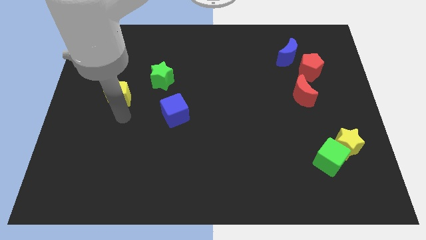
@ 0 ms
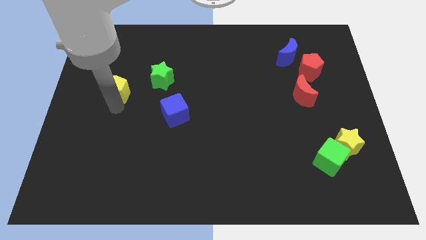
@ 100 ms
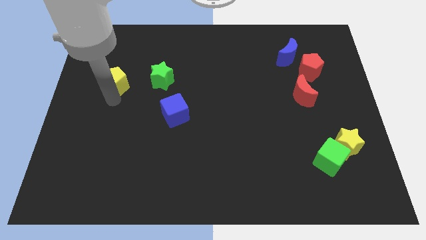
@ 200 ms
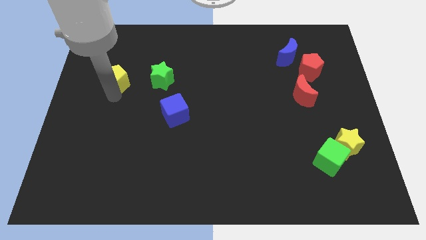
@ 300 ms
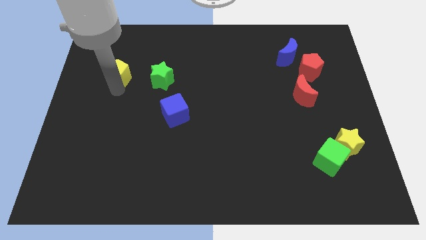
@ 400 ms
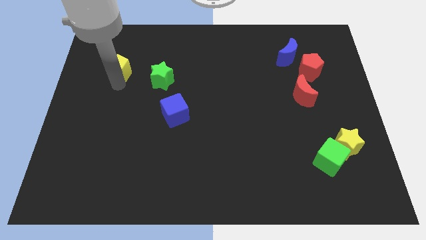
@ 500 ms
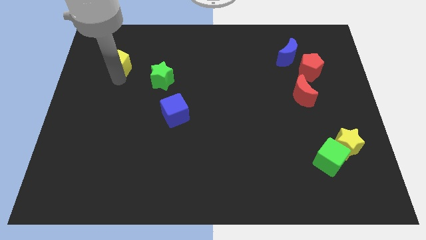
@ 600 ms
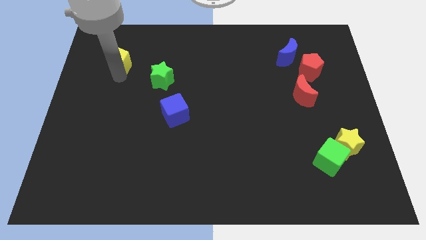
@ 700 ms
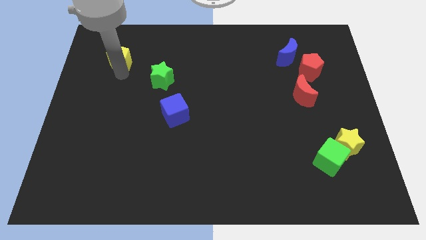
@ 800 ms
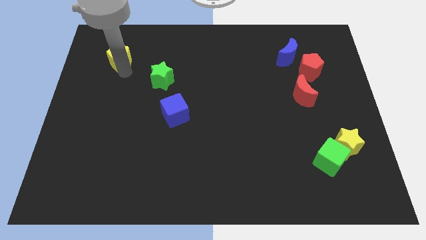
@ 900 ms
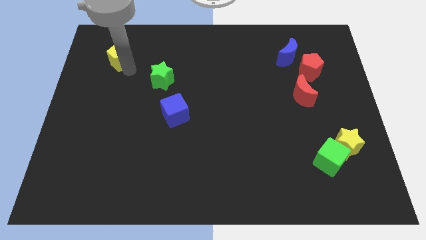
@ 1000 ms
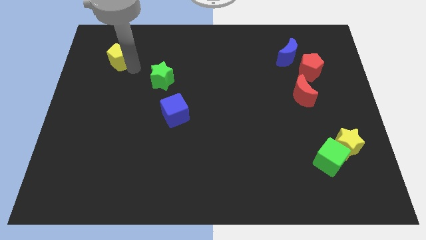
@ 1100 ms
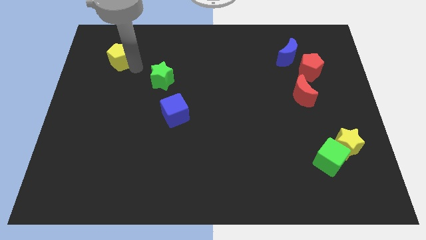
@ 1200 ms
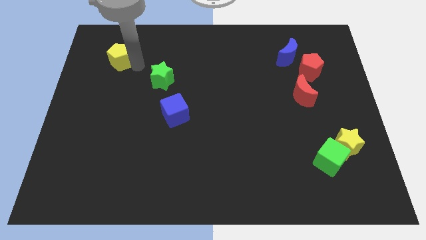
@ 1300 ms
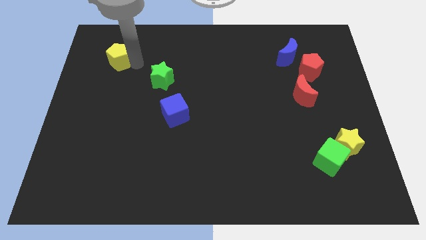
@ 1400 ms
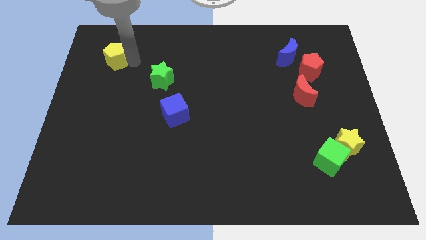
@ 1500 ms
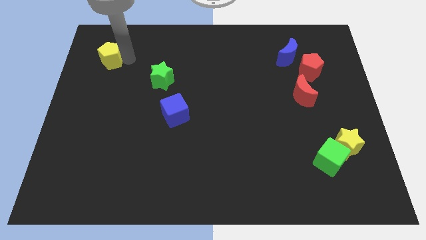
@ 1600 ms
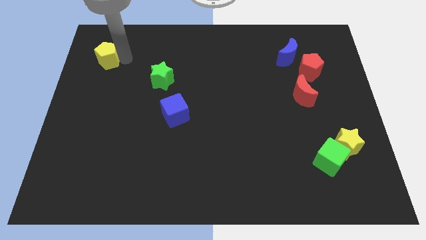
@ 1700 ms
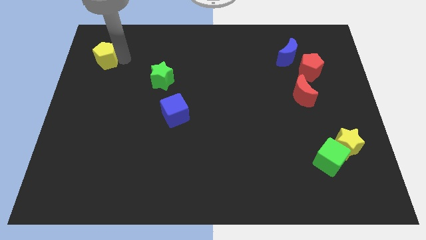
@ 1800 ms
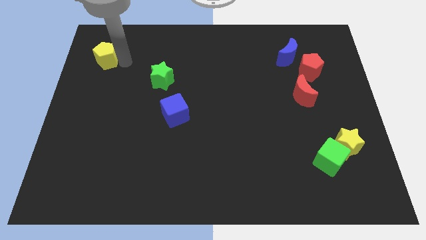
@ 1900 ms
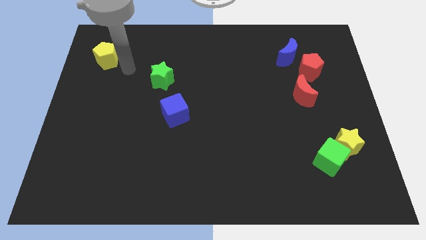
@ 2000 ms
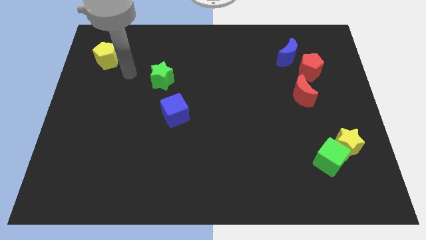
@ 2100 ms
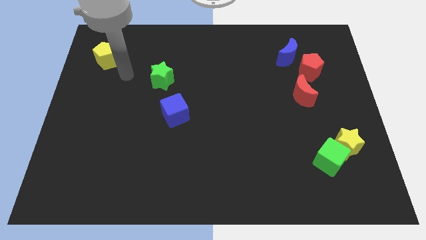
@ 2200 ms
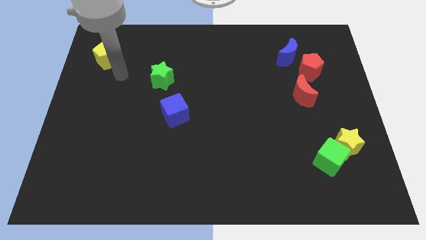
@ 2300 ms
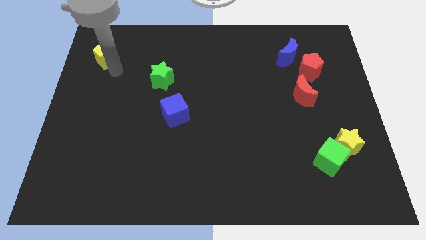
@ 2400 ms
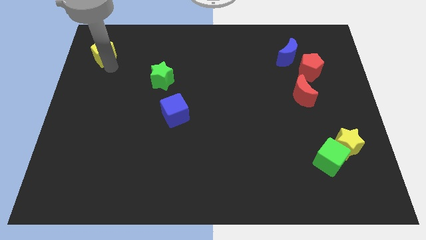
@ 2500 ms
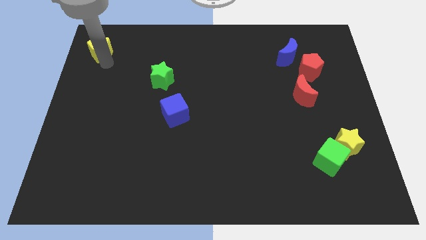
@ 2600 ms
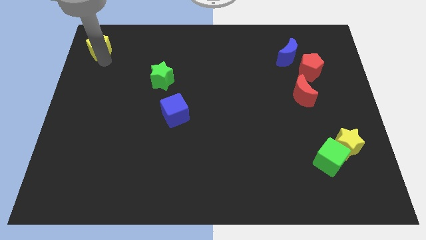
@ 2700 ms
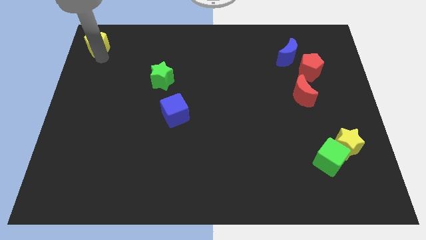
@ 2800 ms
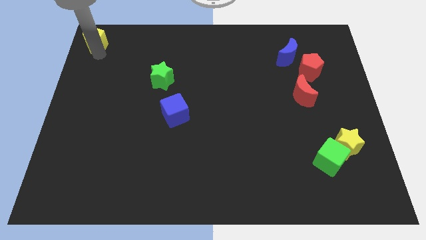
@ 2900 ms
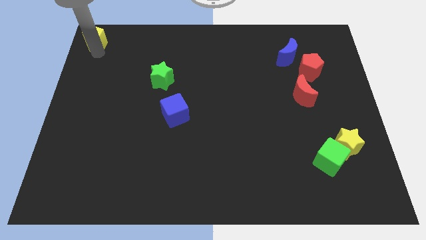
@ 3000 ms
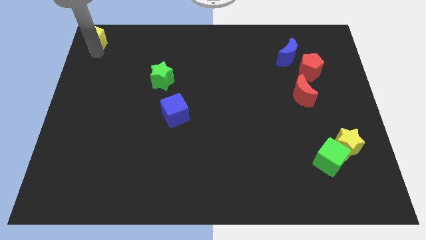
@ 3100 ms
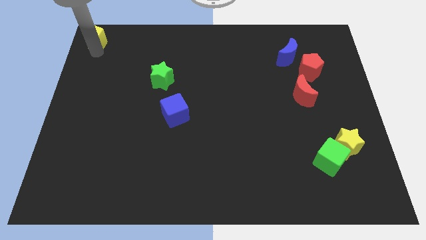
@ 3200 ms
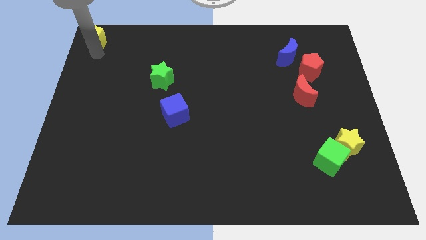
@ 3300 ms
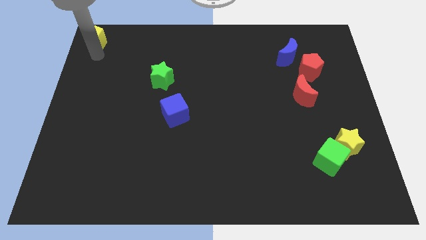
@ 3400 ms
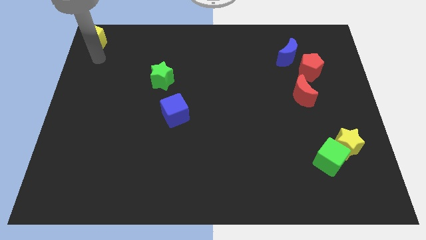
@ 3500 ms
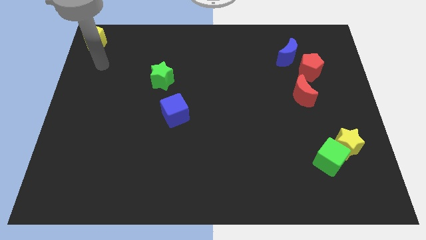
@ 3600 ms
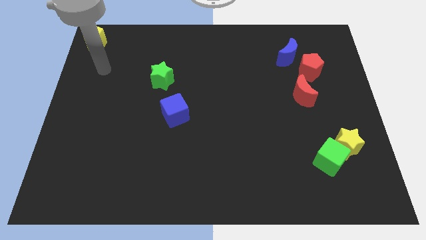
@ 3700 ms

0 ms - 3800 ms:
slide the yellow pentagon to the top left corner of the board

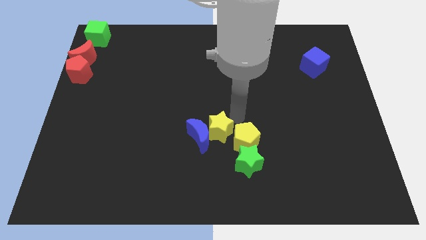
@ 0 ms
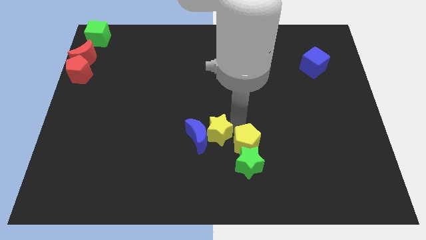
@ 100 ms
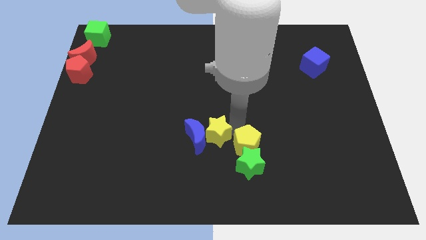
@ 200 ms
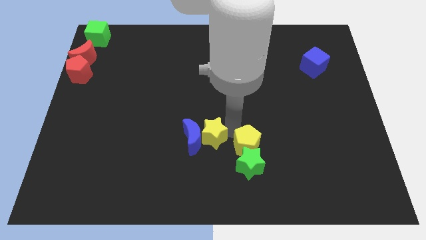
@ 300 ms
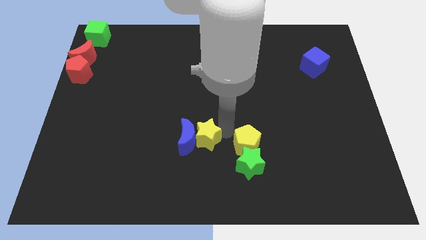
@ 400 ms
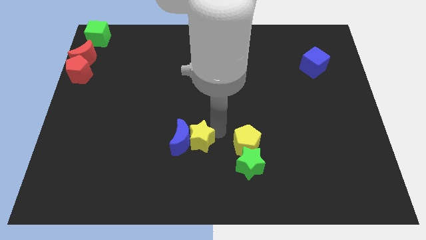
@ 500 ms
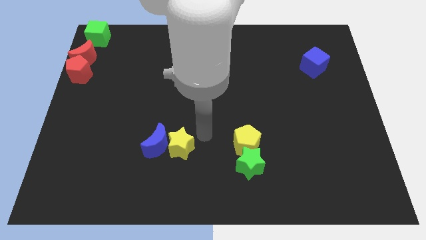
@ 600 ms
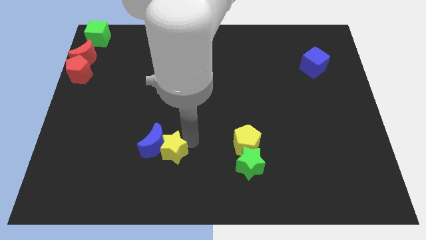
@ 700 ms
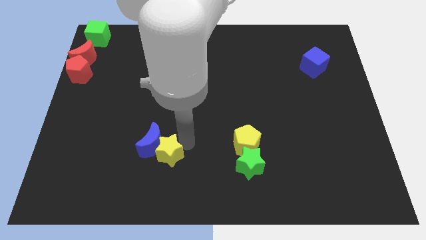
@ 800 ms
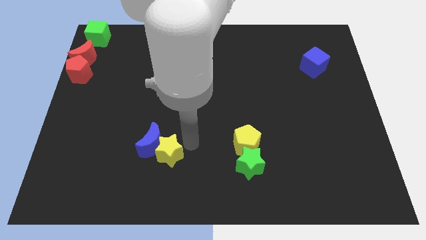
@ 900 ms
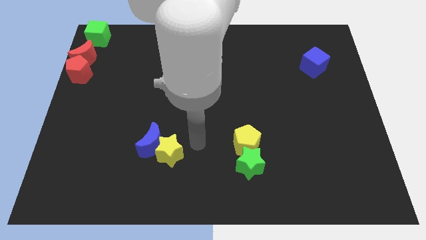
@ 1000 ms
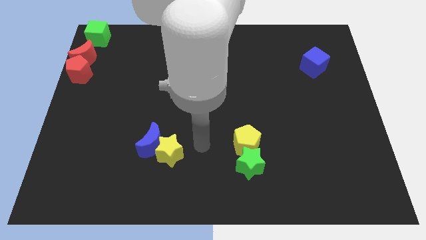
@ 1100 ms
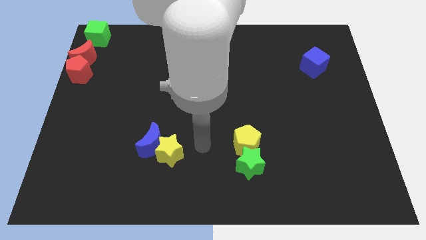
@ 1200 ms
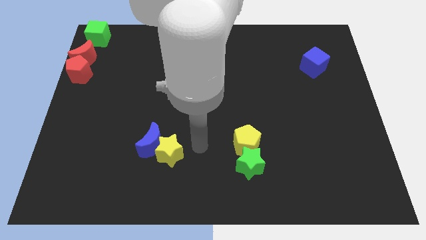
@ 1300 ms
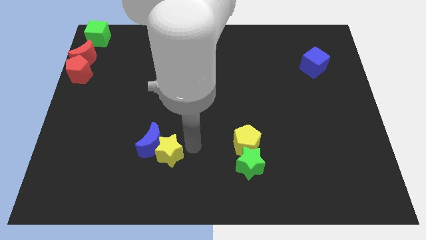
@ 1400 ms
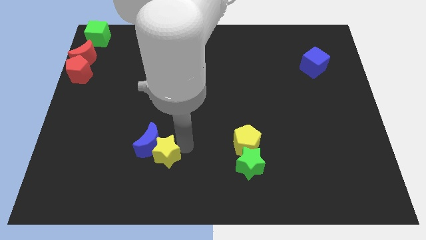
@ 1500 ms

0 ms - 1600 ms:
separate the yellow blocks

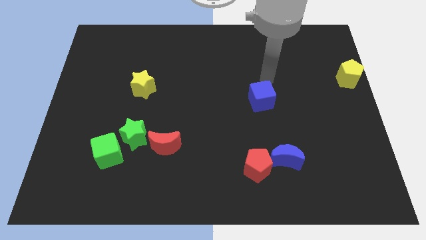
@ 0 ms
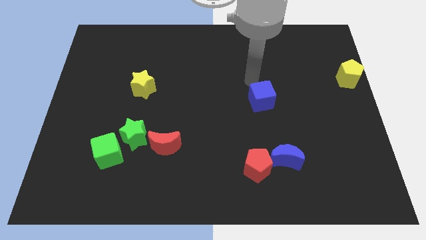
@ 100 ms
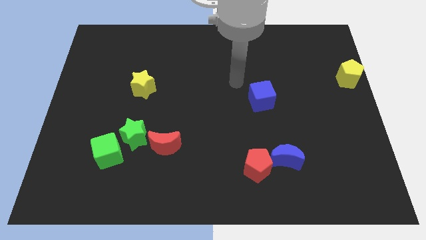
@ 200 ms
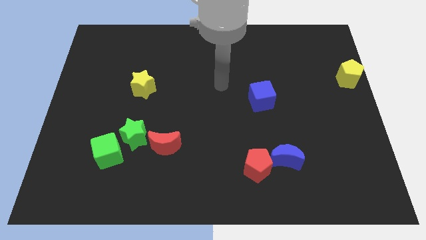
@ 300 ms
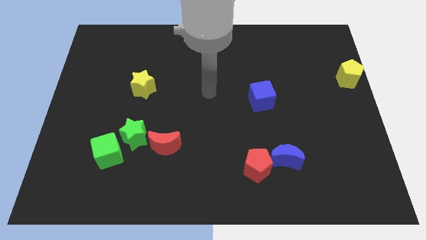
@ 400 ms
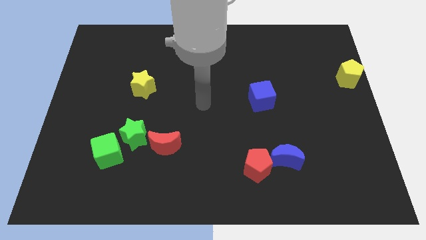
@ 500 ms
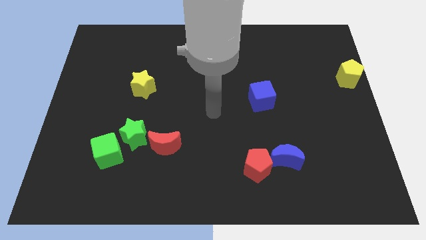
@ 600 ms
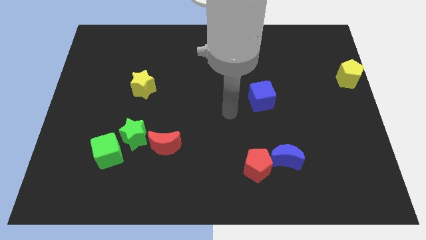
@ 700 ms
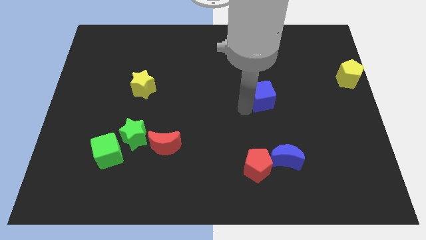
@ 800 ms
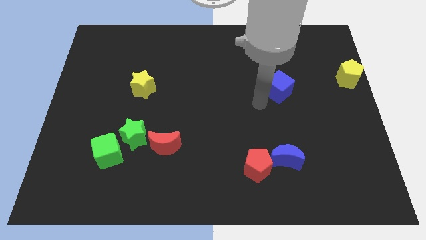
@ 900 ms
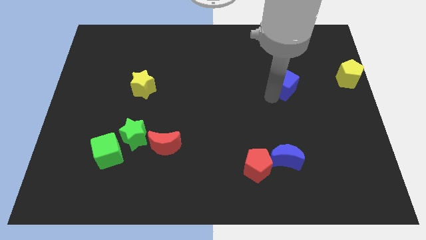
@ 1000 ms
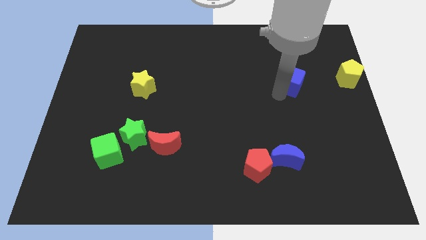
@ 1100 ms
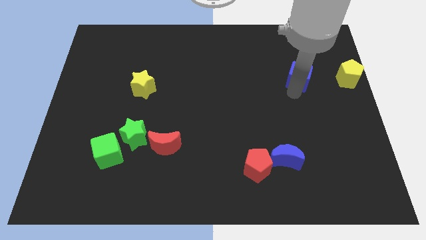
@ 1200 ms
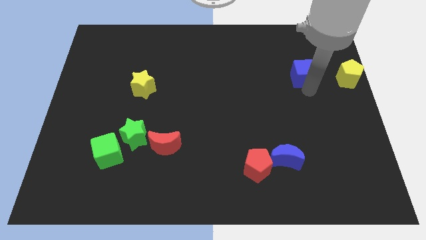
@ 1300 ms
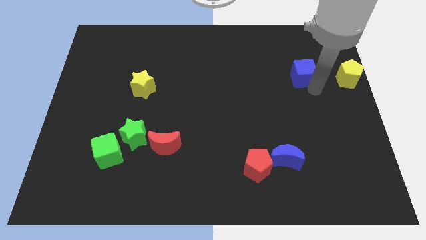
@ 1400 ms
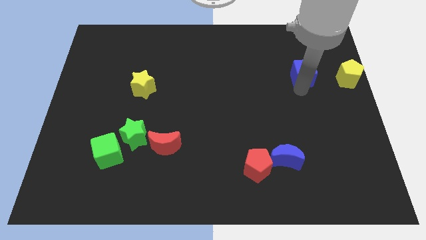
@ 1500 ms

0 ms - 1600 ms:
place the blue cube parallel to the left of the yellow pentagon

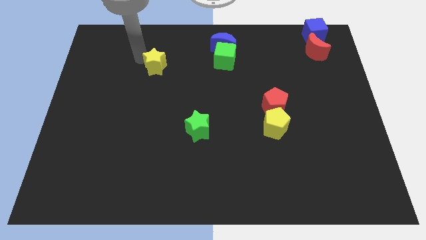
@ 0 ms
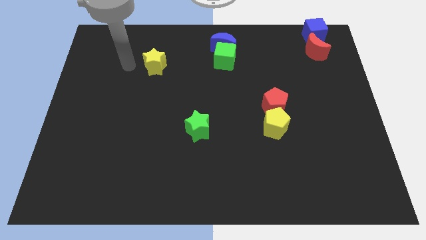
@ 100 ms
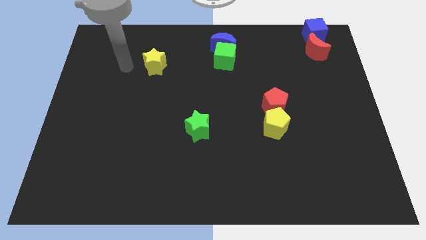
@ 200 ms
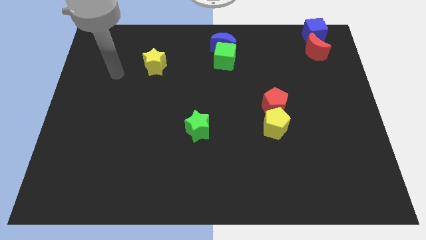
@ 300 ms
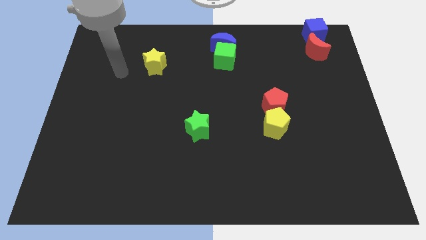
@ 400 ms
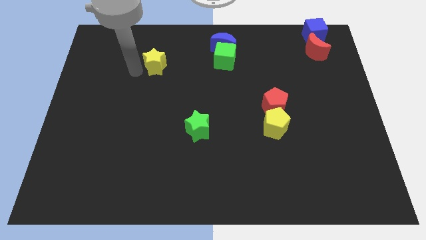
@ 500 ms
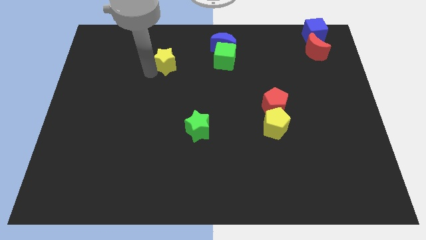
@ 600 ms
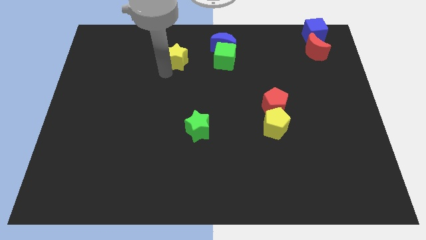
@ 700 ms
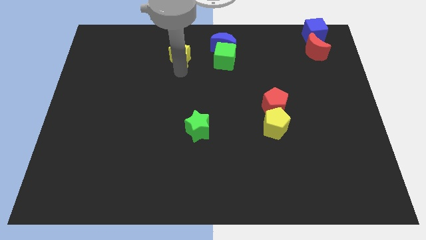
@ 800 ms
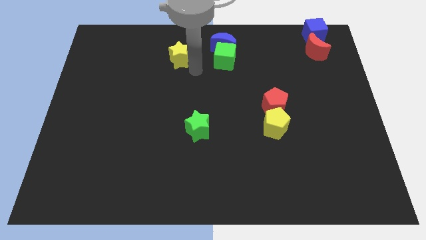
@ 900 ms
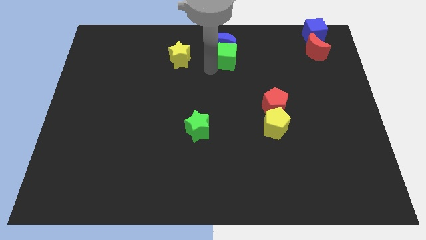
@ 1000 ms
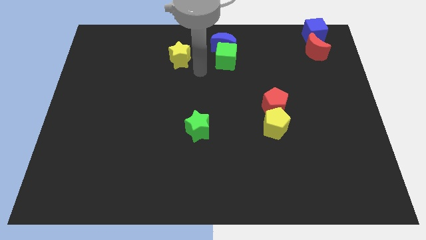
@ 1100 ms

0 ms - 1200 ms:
place yellow star parallel left to the green cube

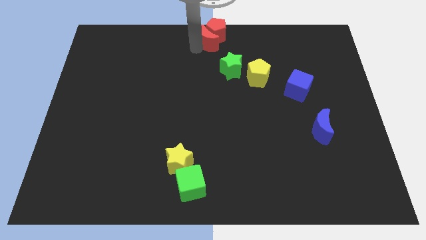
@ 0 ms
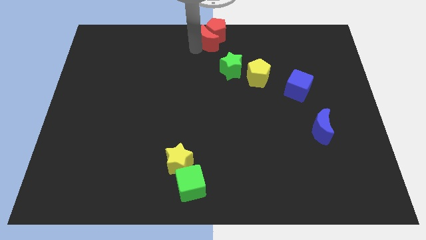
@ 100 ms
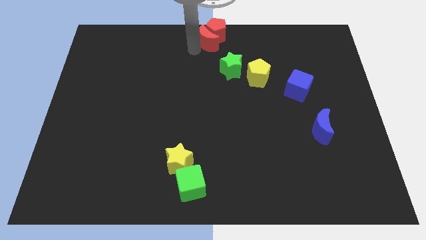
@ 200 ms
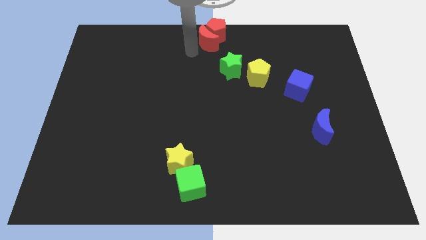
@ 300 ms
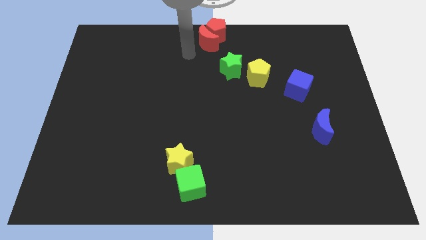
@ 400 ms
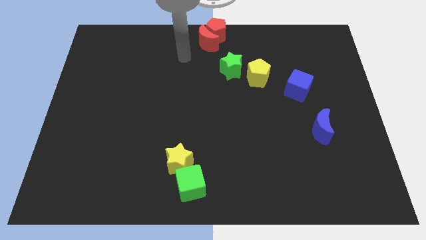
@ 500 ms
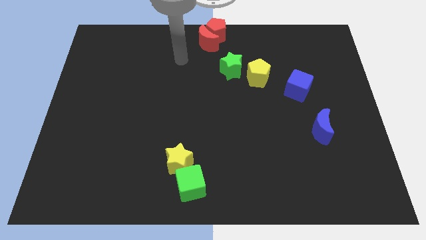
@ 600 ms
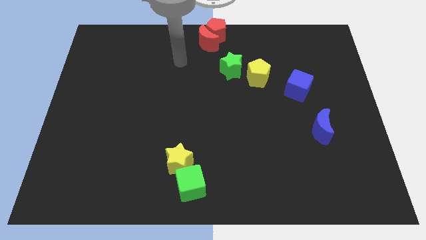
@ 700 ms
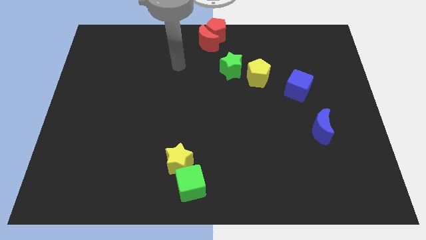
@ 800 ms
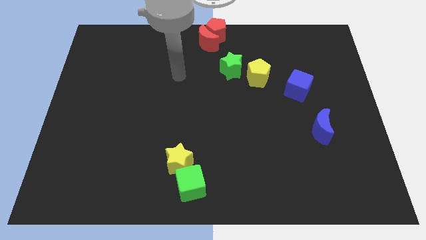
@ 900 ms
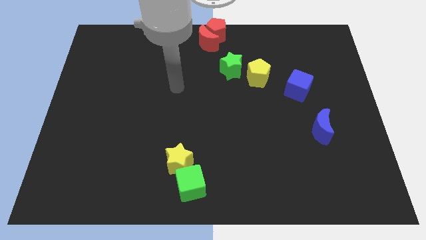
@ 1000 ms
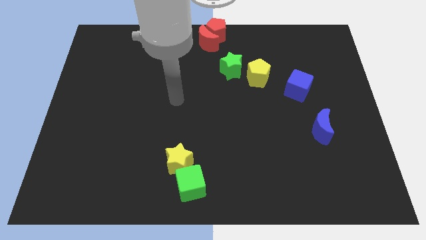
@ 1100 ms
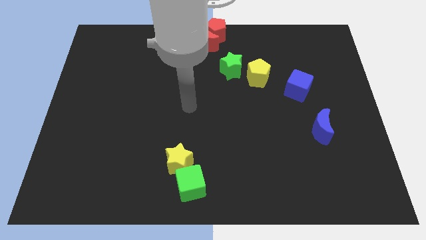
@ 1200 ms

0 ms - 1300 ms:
move your arm away from the red crescent
